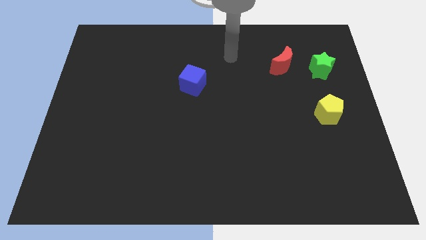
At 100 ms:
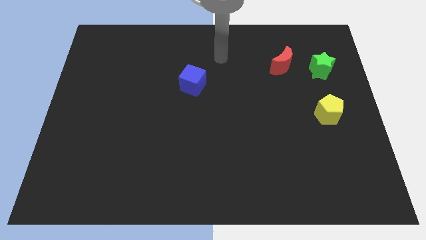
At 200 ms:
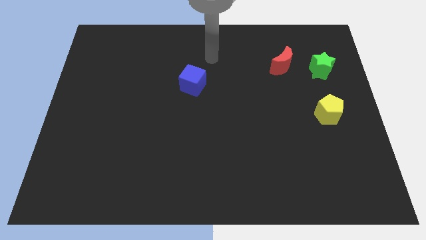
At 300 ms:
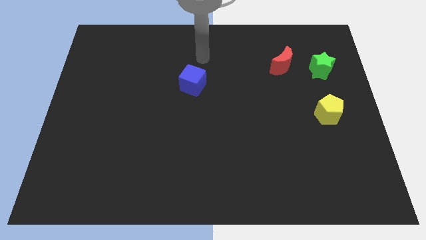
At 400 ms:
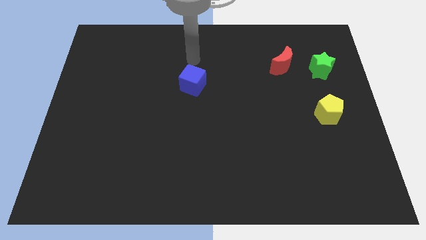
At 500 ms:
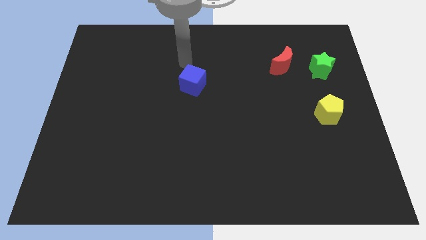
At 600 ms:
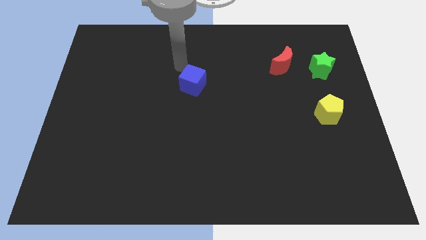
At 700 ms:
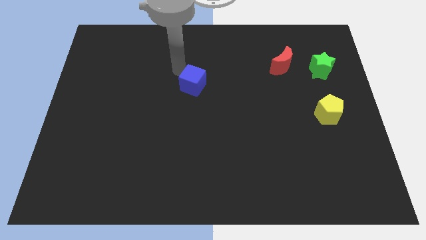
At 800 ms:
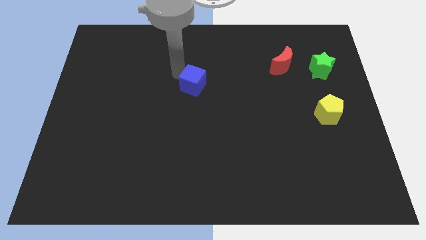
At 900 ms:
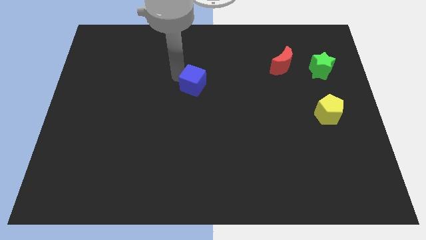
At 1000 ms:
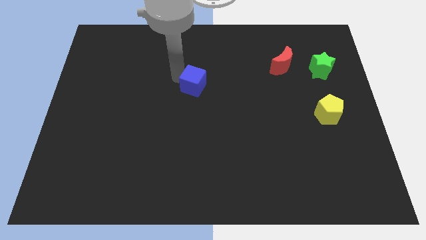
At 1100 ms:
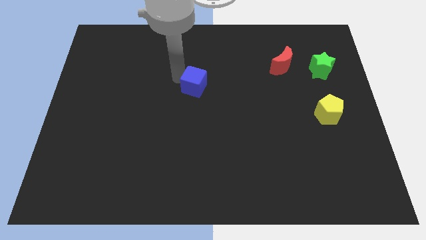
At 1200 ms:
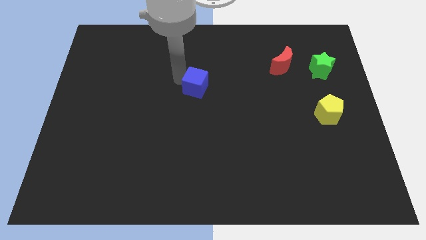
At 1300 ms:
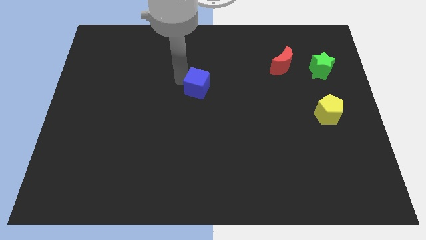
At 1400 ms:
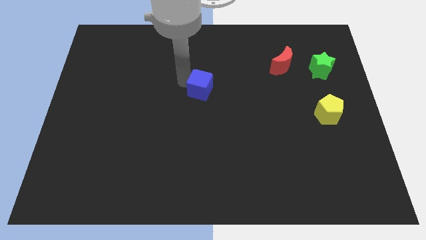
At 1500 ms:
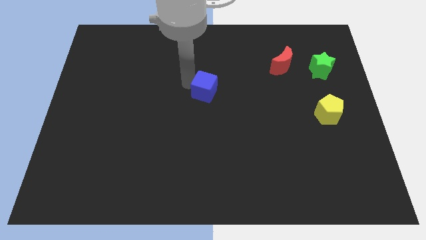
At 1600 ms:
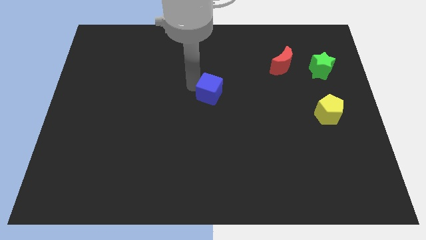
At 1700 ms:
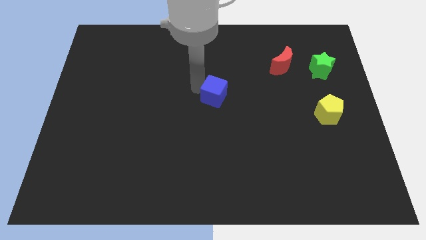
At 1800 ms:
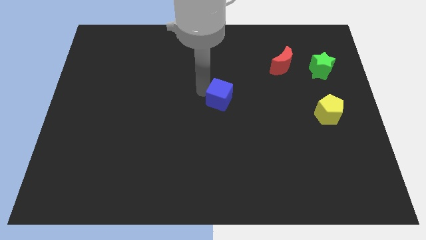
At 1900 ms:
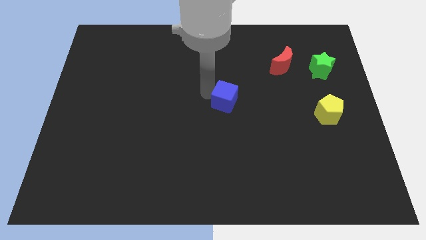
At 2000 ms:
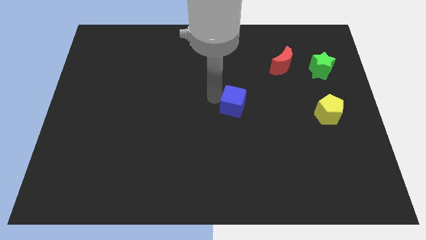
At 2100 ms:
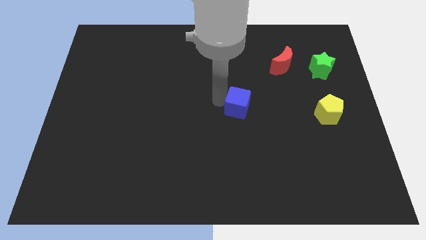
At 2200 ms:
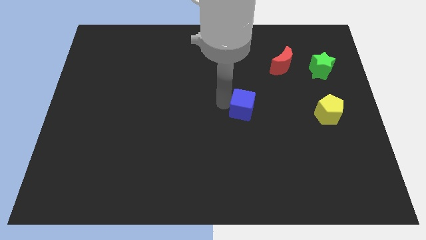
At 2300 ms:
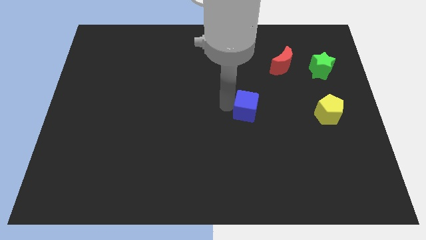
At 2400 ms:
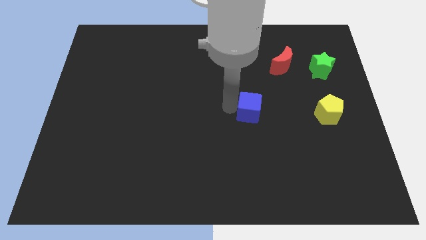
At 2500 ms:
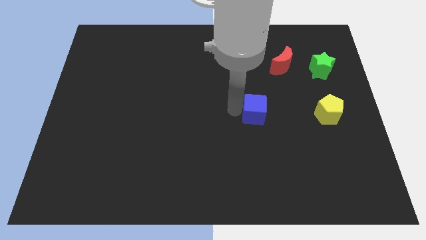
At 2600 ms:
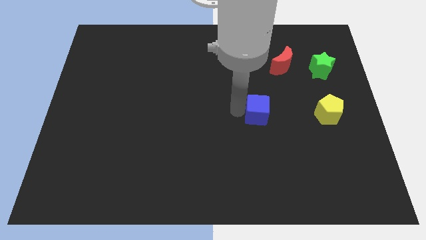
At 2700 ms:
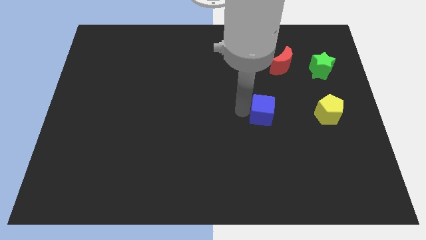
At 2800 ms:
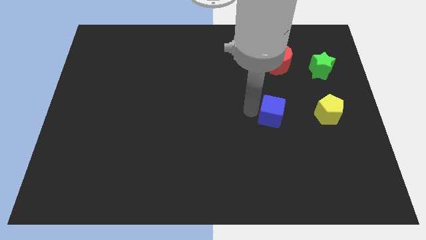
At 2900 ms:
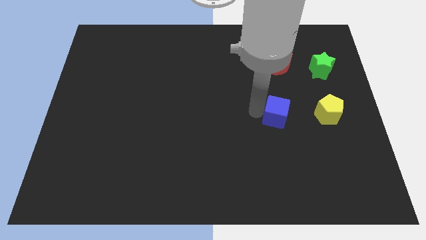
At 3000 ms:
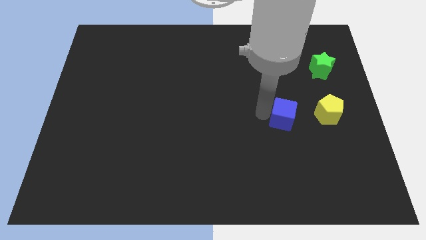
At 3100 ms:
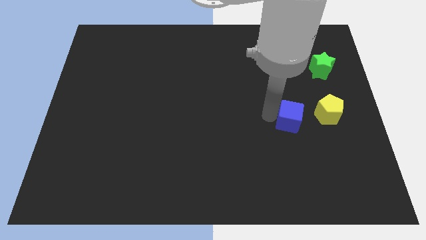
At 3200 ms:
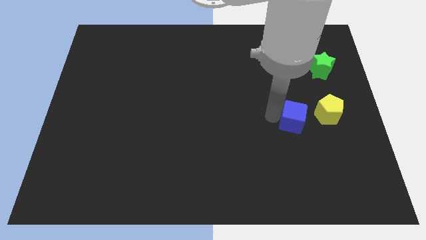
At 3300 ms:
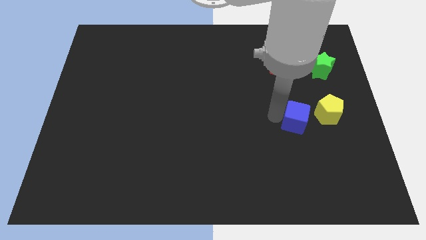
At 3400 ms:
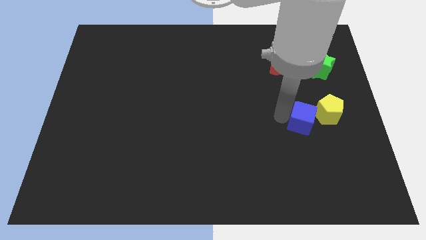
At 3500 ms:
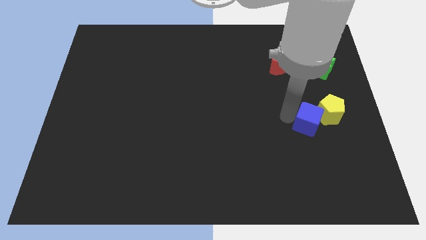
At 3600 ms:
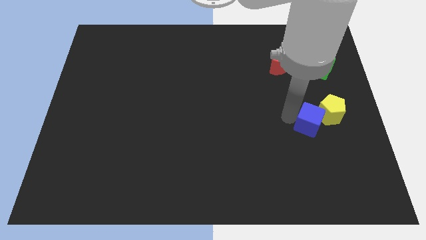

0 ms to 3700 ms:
put the cube next to the pentagon

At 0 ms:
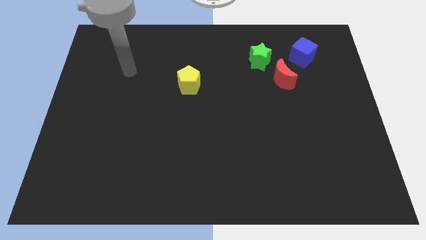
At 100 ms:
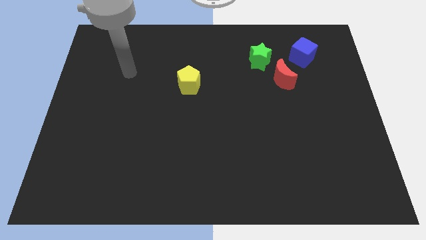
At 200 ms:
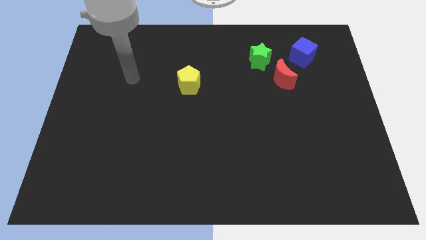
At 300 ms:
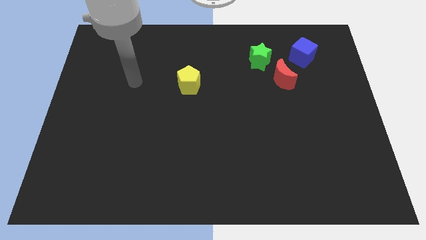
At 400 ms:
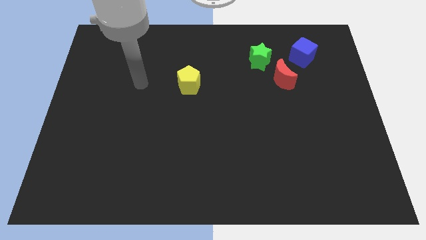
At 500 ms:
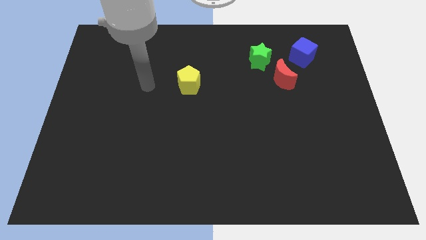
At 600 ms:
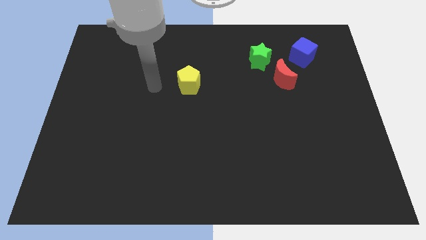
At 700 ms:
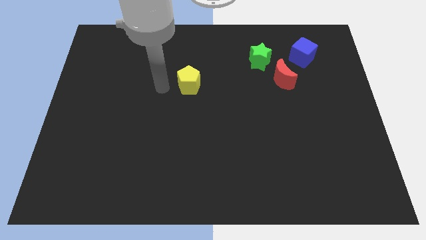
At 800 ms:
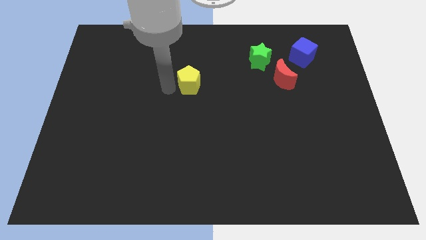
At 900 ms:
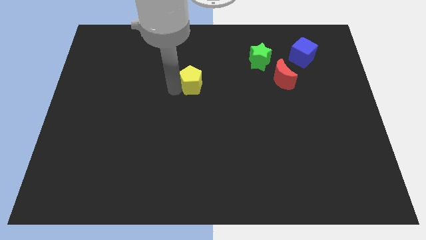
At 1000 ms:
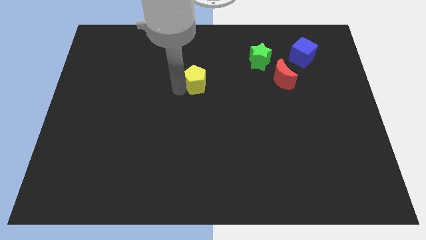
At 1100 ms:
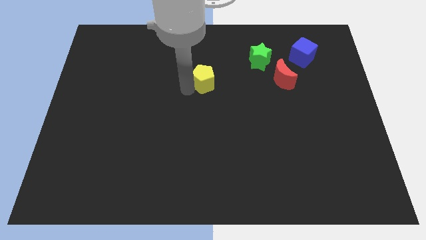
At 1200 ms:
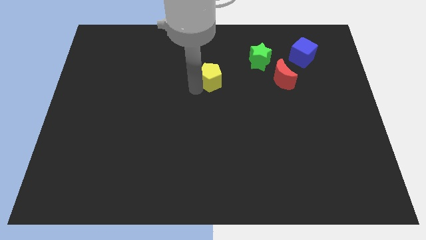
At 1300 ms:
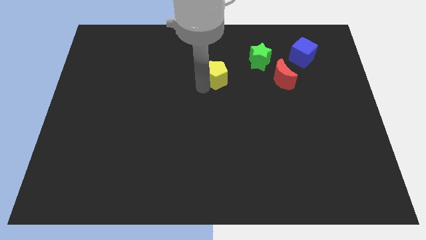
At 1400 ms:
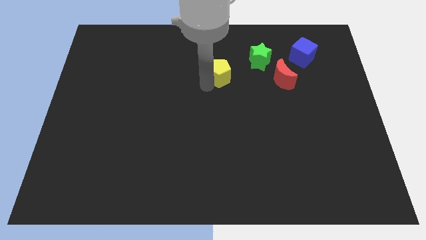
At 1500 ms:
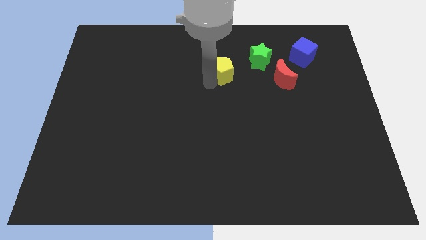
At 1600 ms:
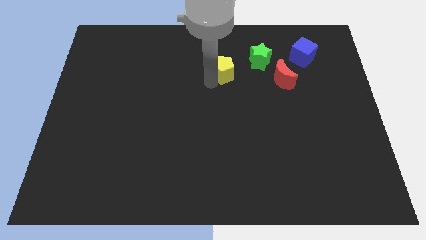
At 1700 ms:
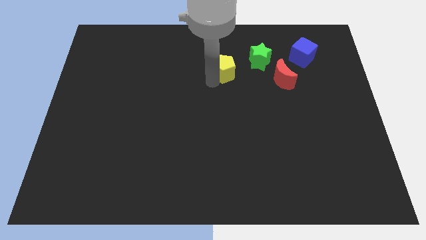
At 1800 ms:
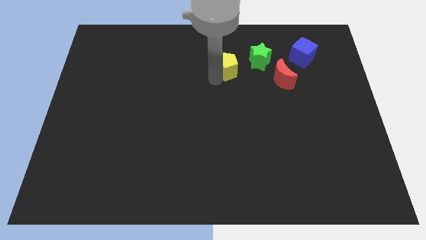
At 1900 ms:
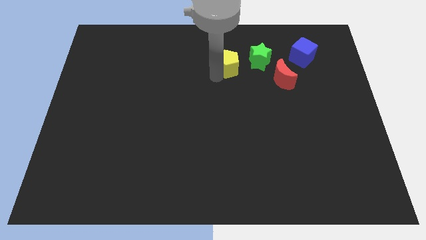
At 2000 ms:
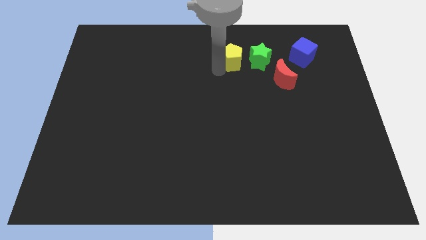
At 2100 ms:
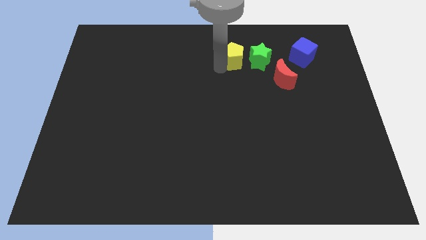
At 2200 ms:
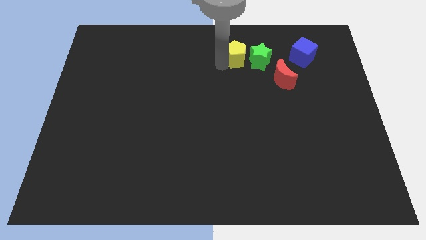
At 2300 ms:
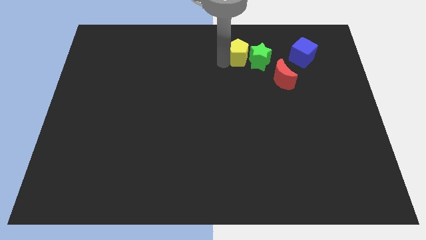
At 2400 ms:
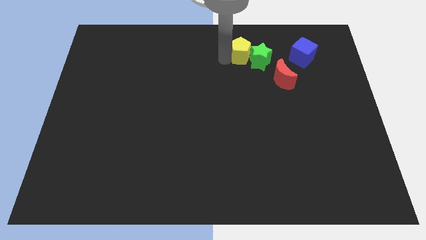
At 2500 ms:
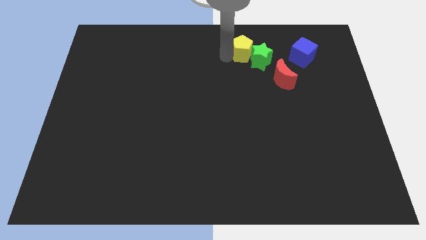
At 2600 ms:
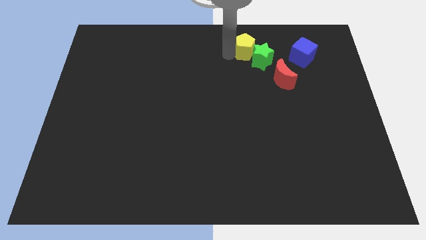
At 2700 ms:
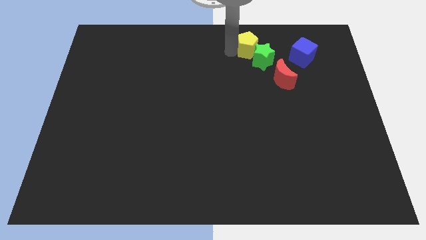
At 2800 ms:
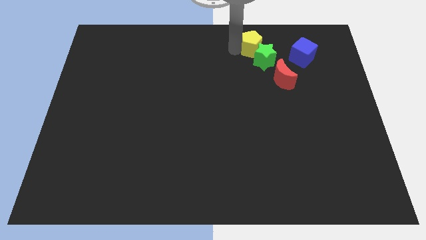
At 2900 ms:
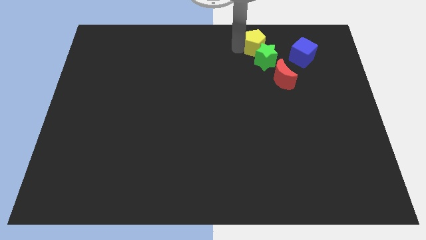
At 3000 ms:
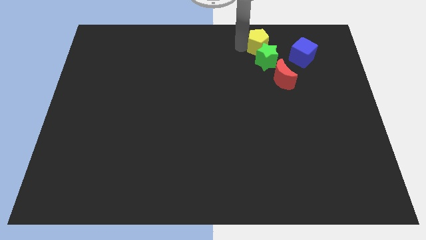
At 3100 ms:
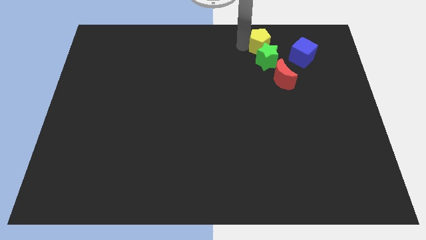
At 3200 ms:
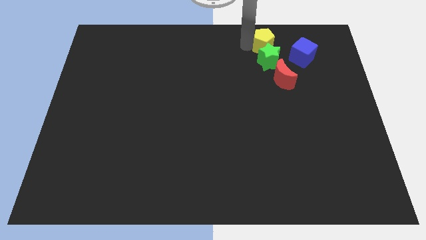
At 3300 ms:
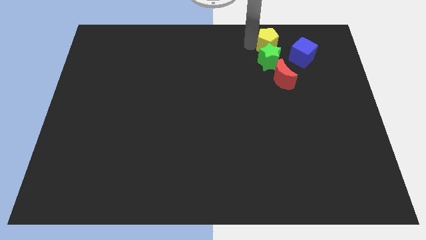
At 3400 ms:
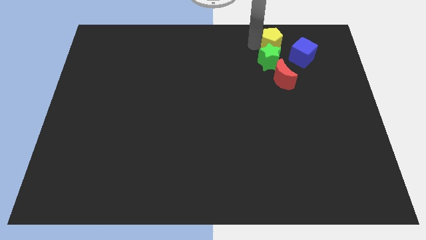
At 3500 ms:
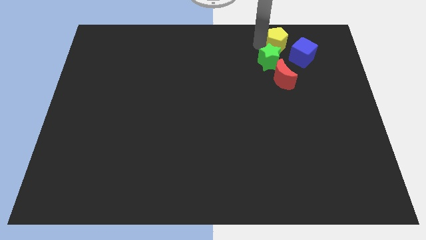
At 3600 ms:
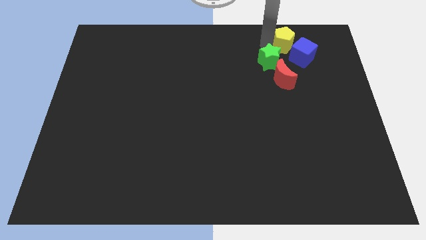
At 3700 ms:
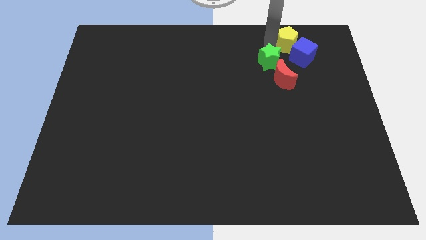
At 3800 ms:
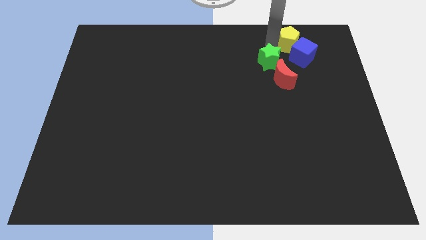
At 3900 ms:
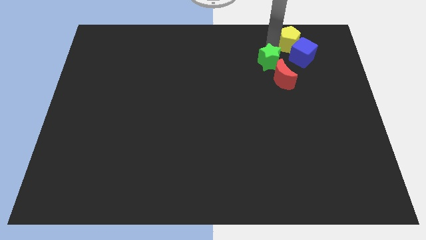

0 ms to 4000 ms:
slide the yellow block close to the blue block

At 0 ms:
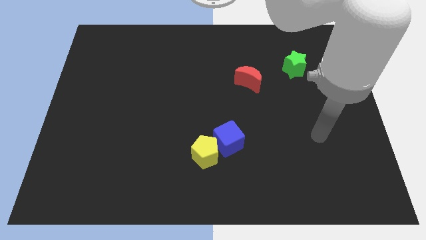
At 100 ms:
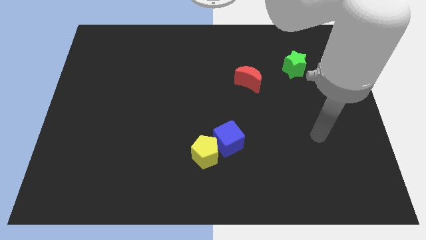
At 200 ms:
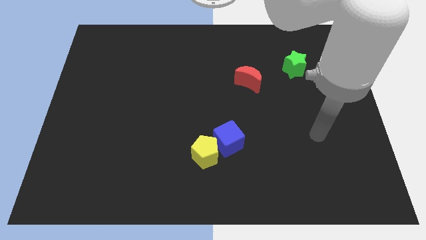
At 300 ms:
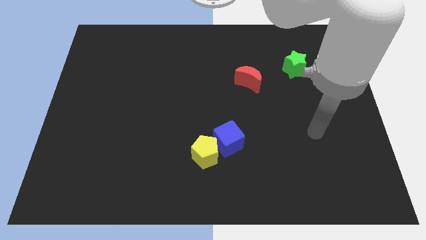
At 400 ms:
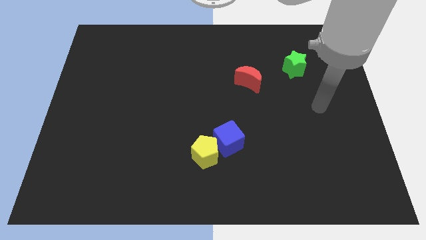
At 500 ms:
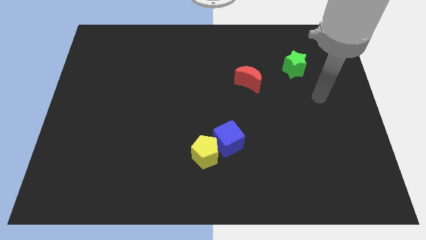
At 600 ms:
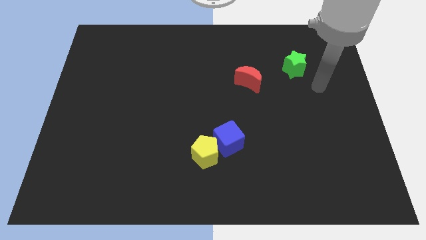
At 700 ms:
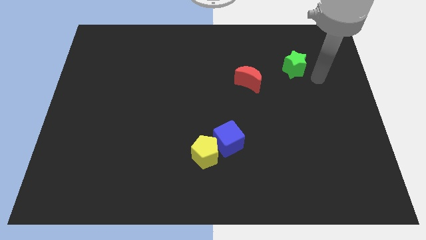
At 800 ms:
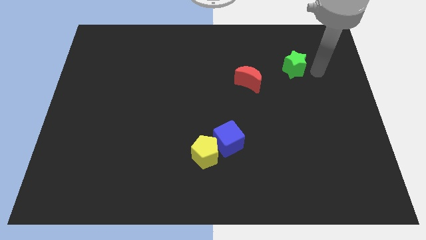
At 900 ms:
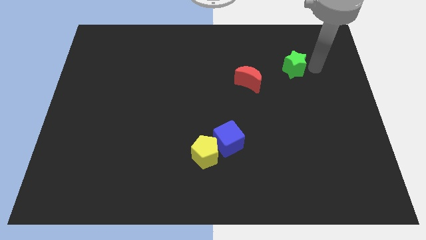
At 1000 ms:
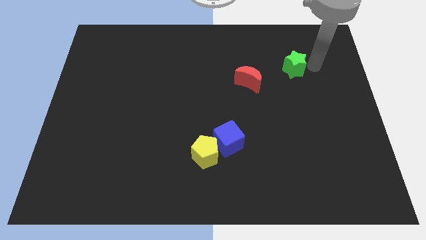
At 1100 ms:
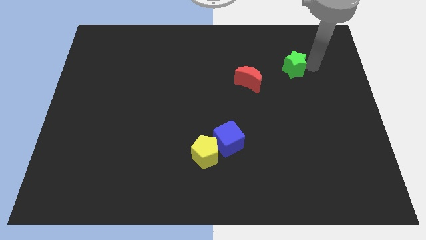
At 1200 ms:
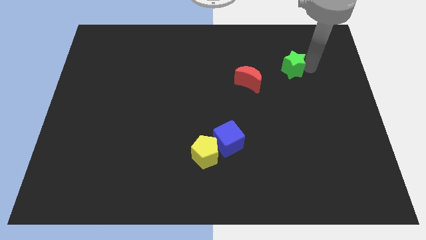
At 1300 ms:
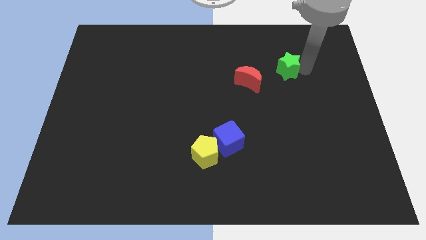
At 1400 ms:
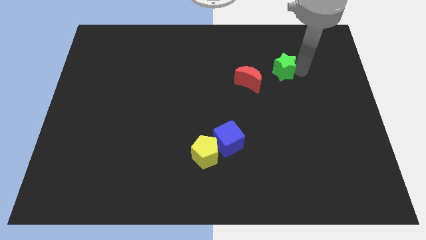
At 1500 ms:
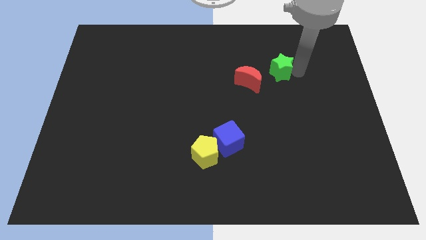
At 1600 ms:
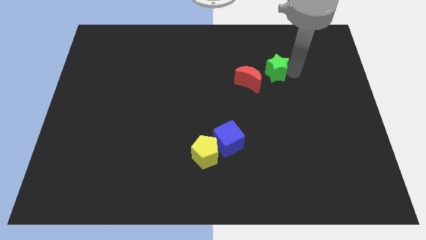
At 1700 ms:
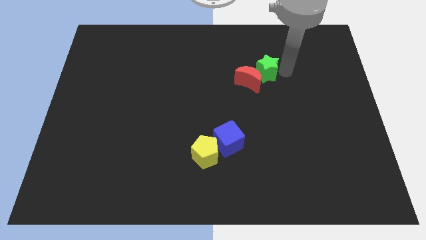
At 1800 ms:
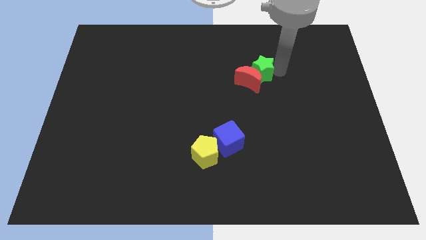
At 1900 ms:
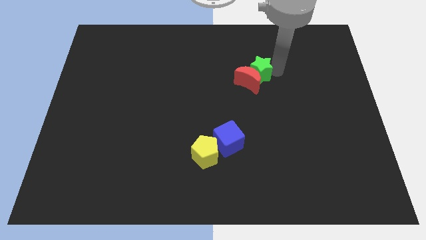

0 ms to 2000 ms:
slide the star towards the red moon
